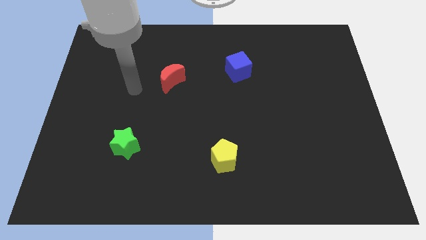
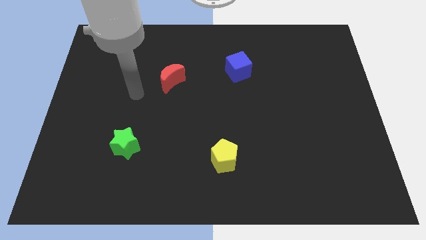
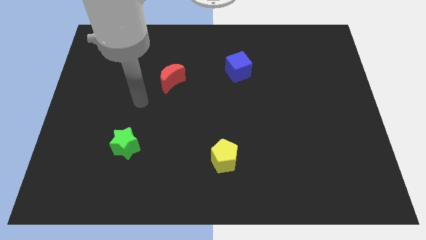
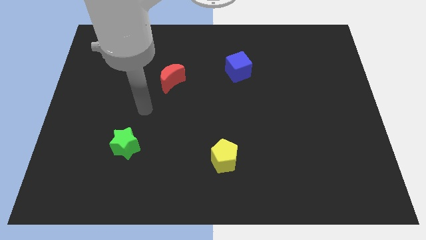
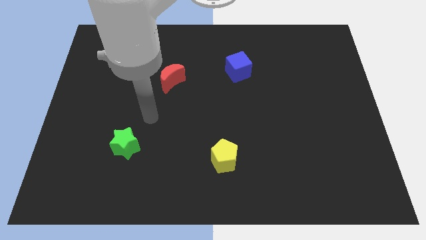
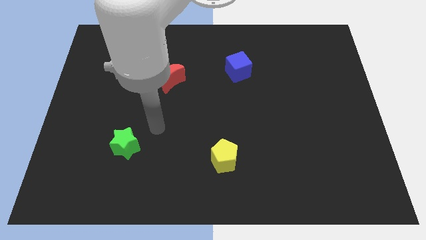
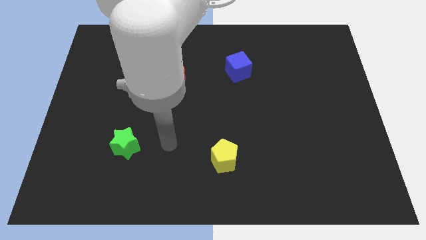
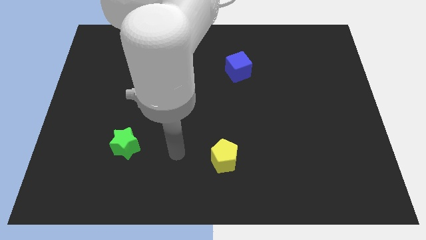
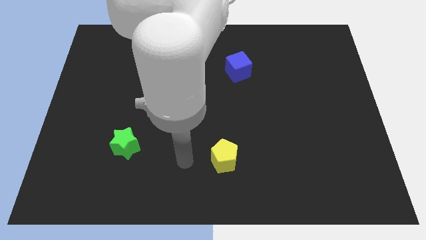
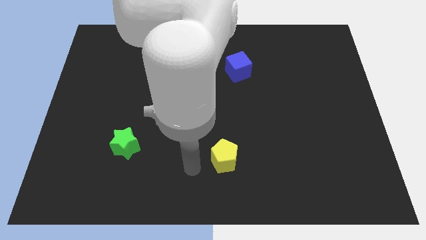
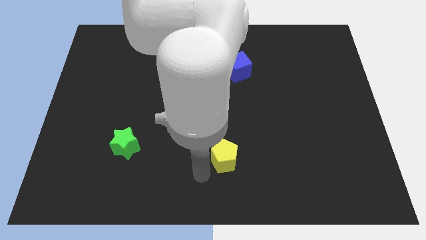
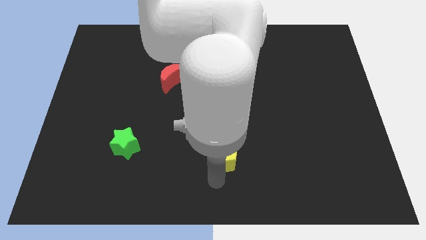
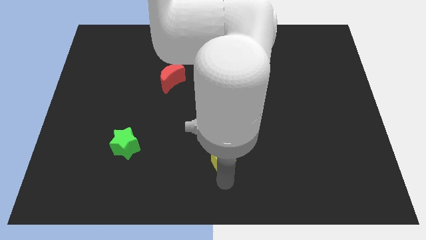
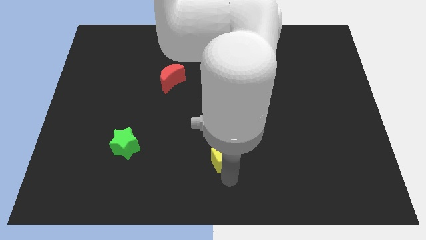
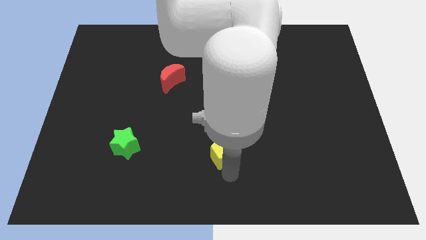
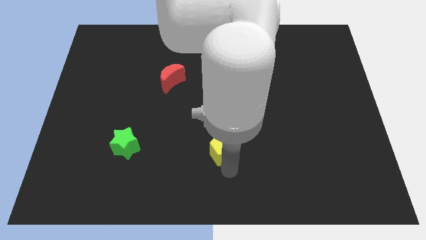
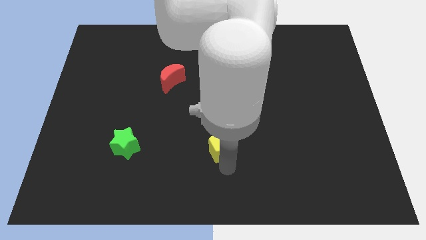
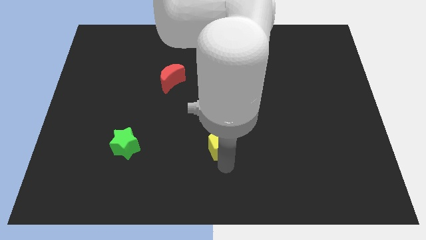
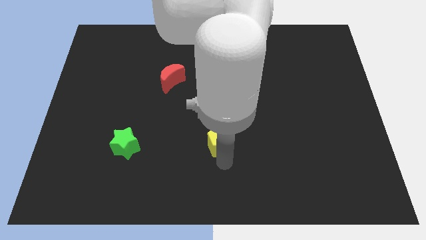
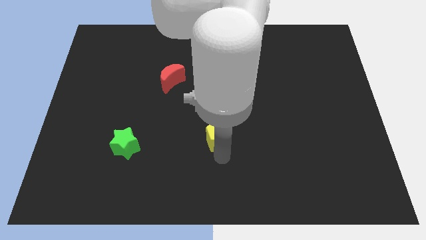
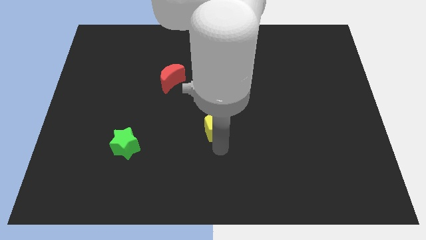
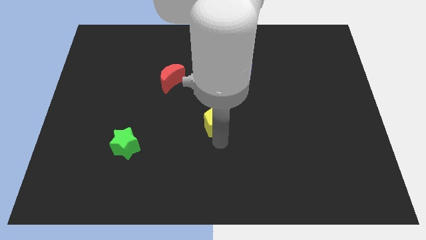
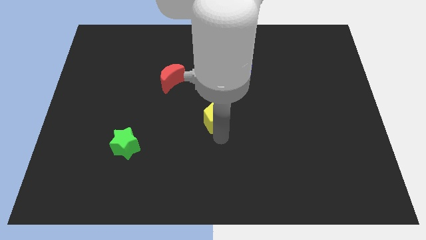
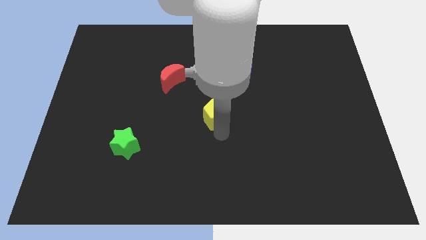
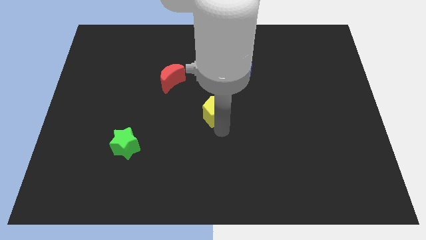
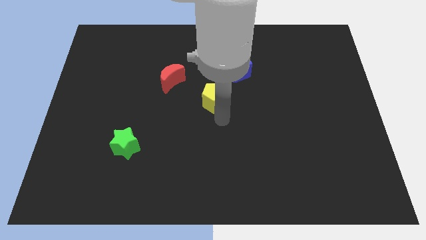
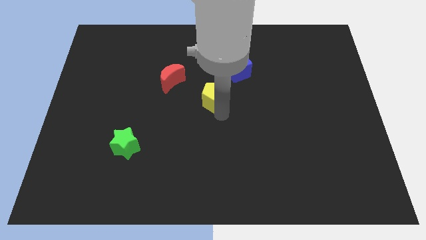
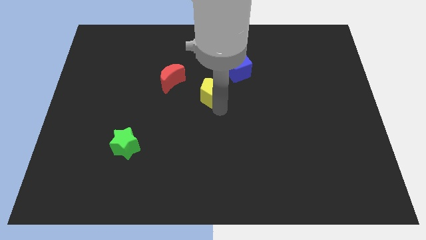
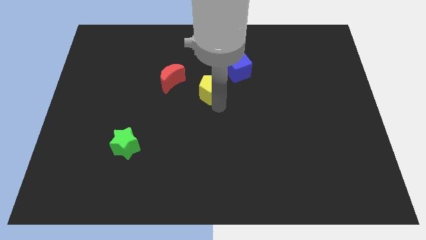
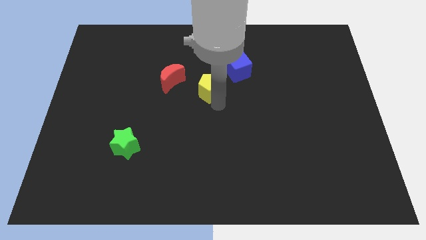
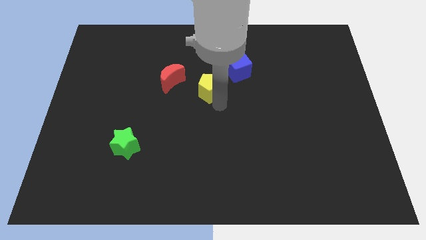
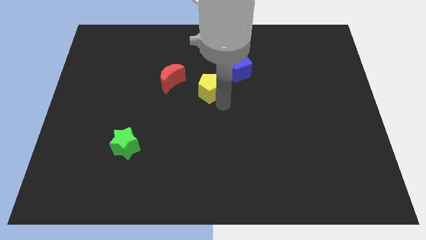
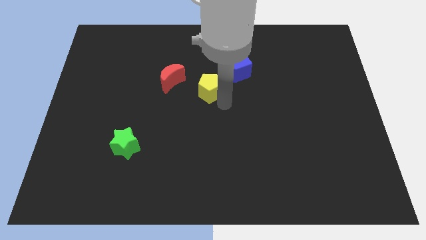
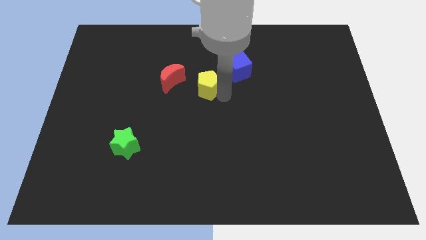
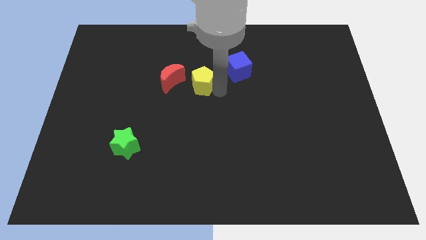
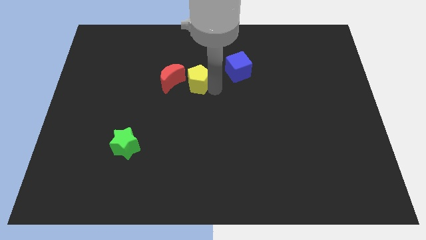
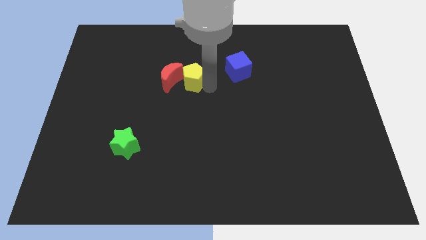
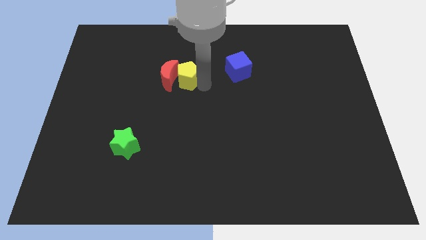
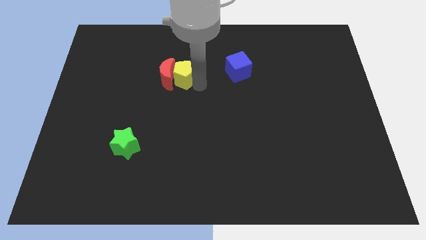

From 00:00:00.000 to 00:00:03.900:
slide the pentagon towards the moon

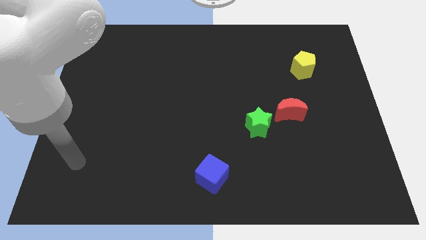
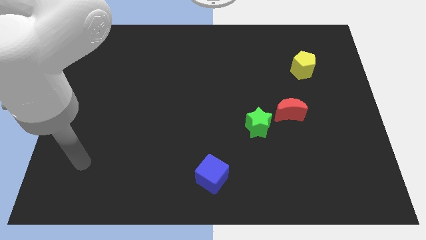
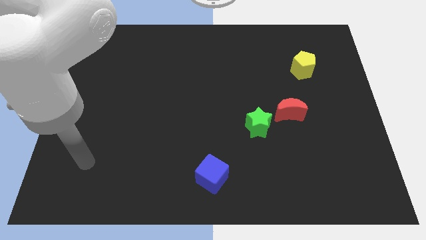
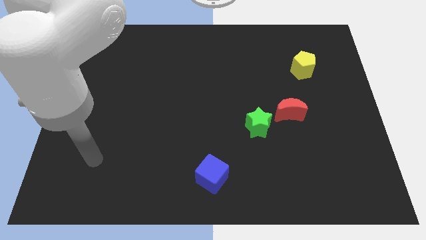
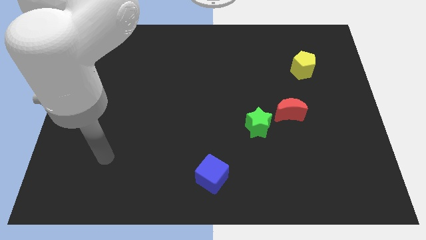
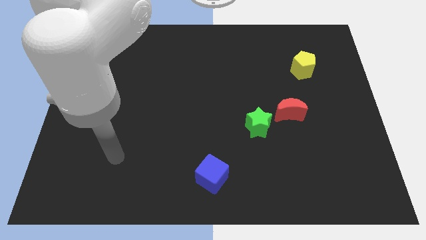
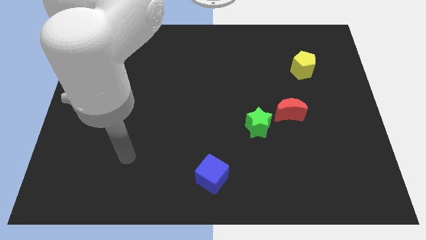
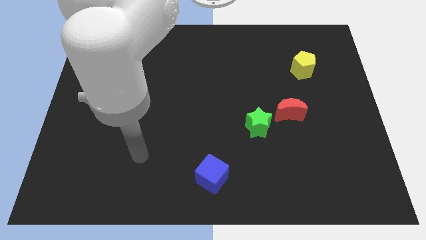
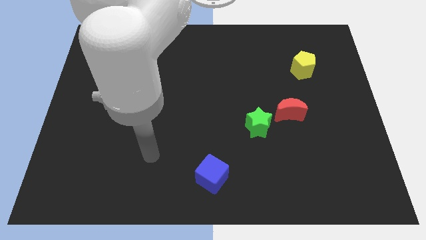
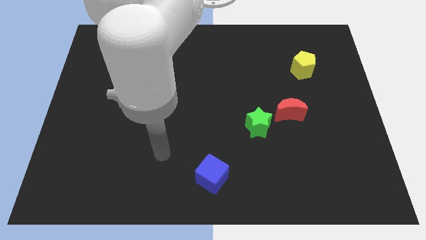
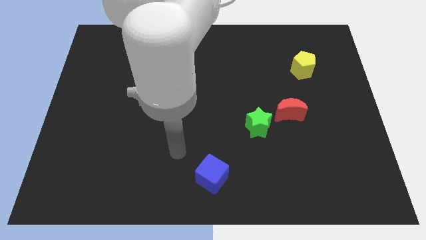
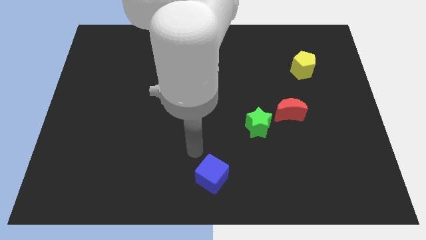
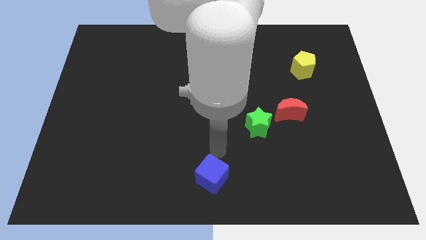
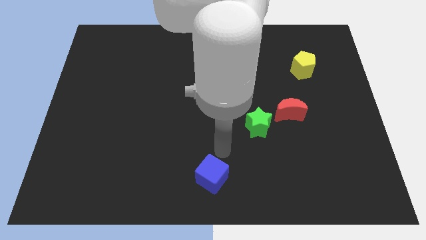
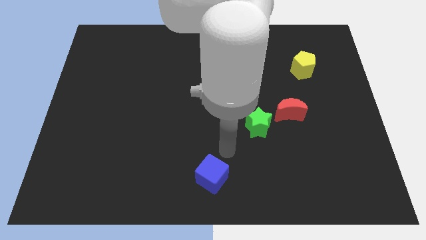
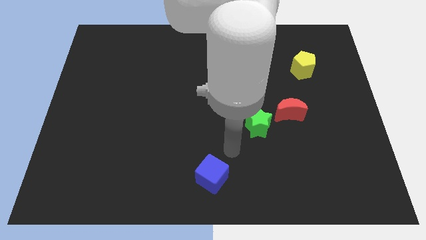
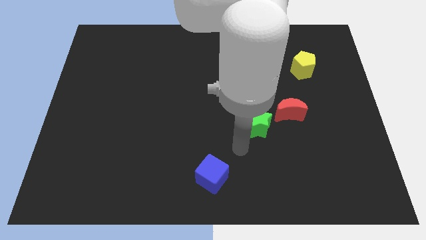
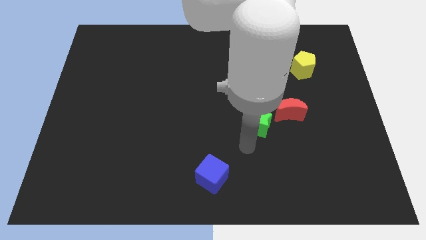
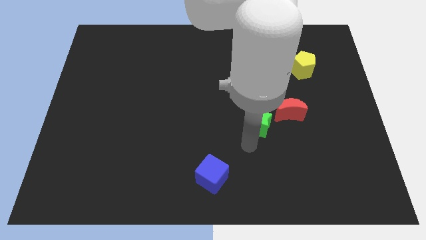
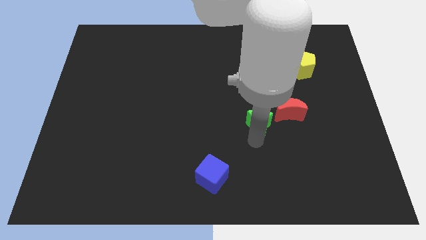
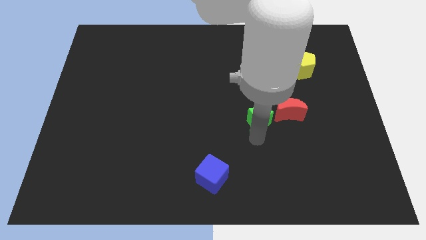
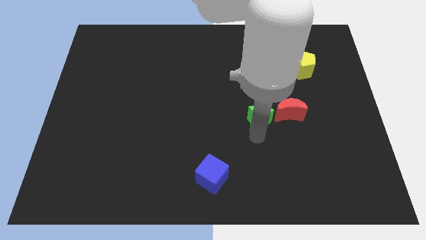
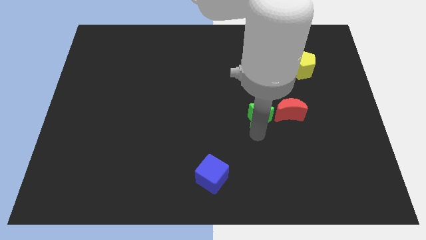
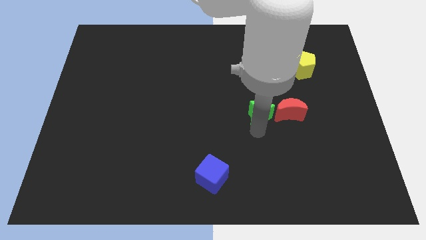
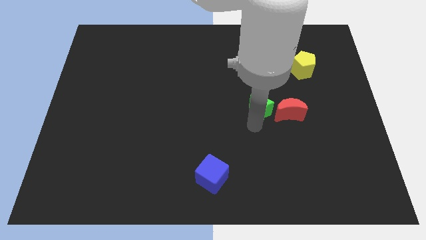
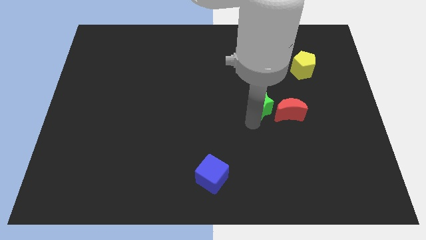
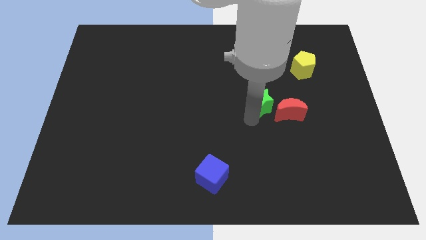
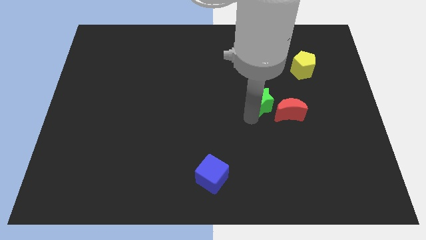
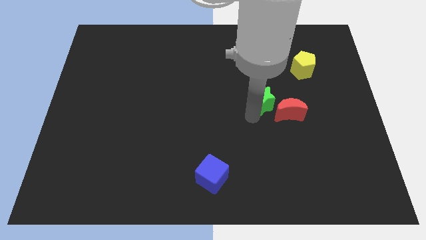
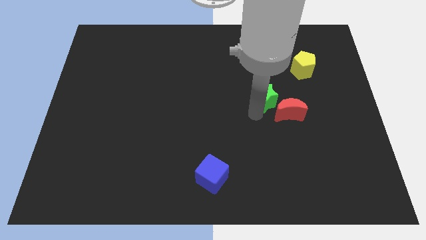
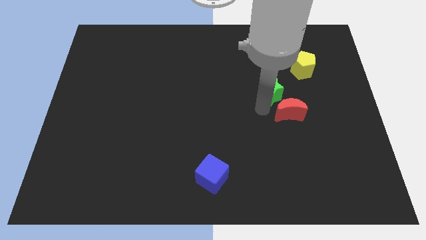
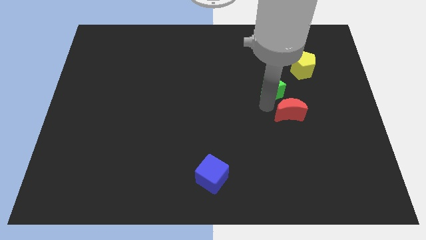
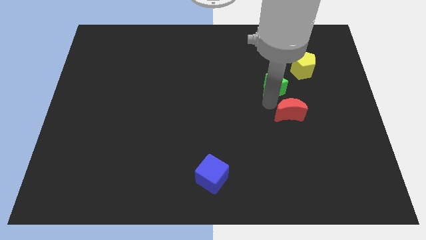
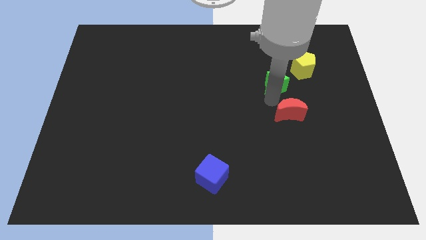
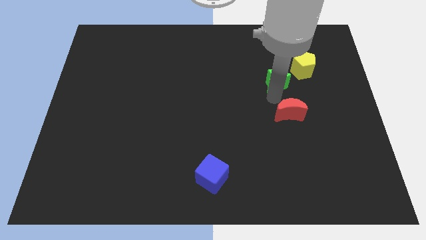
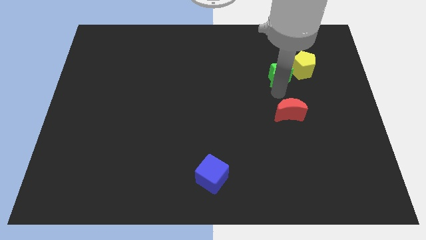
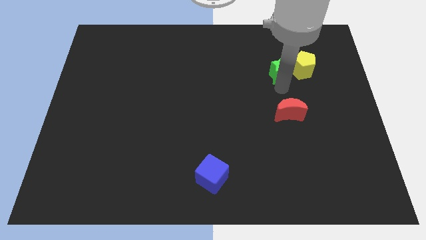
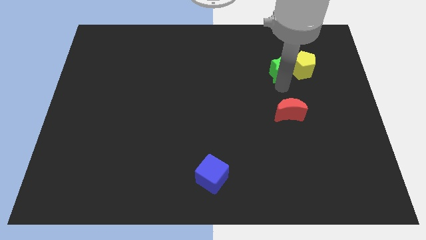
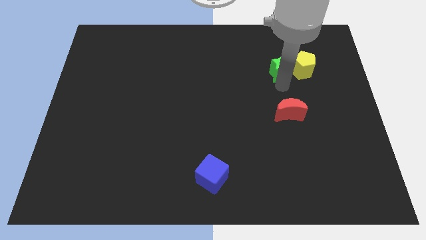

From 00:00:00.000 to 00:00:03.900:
slide the star towards the yellow block

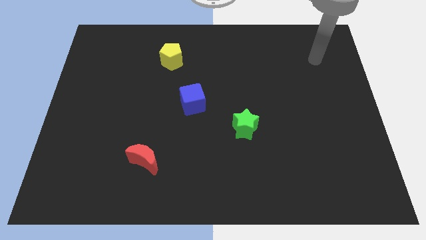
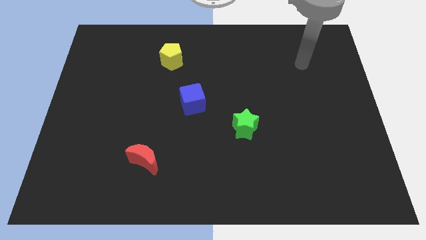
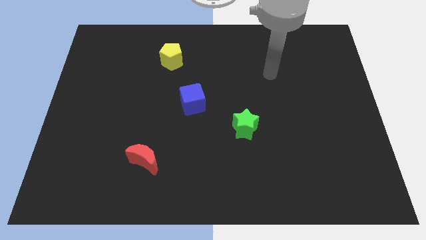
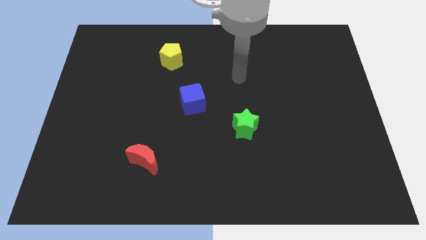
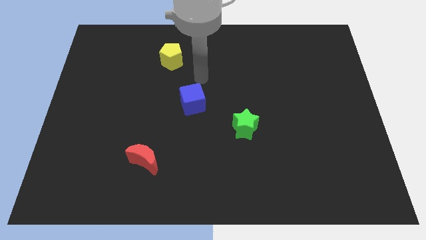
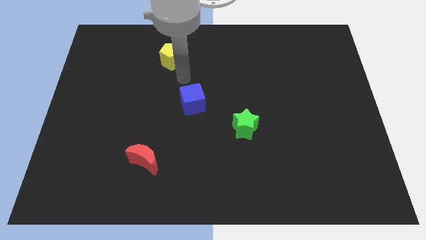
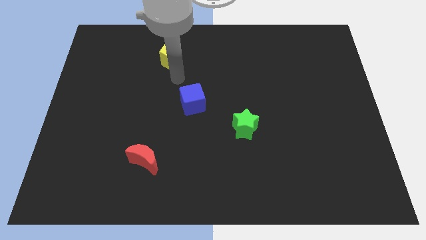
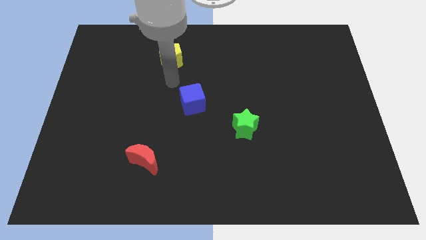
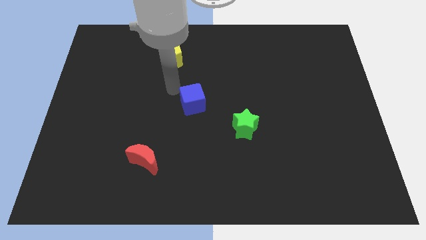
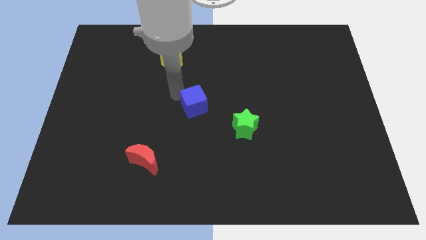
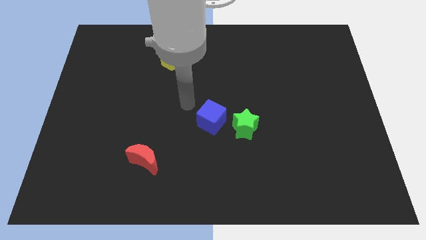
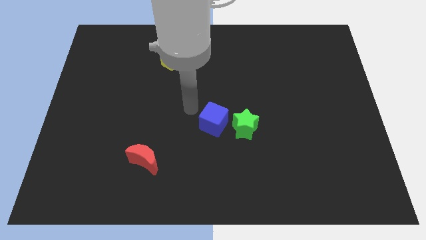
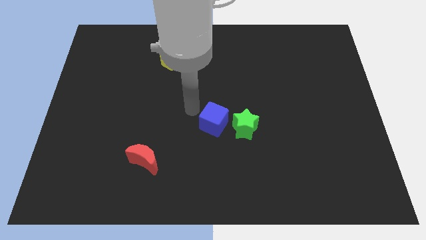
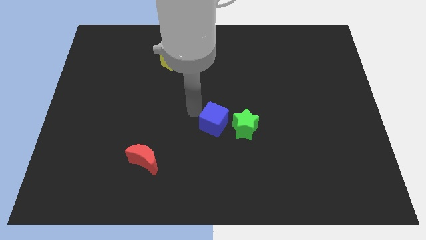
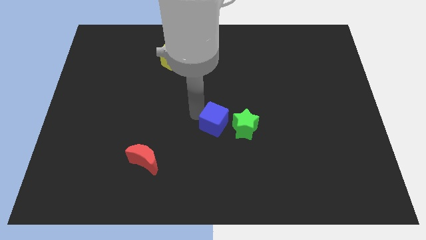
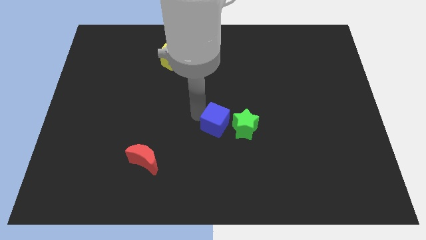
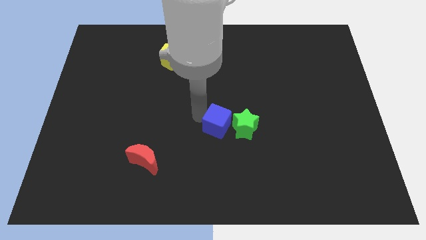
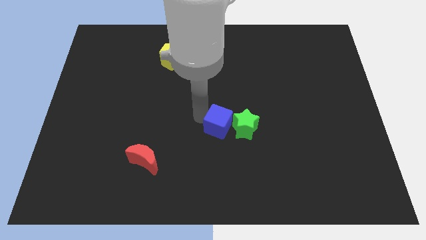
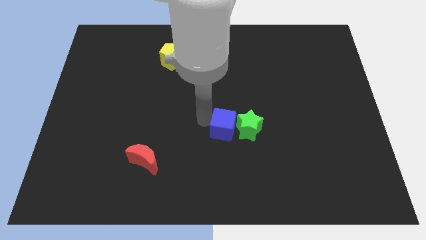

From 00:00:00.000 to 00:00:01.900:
put the blue cube towards the green block
